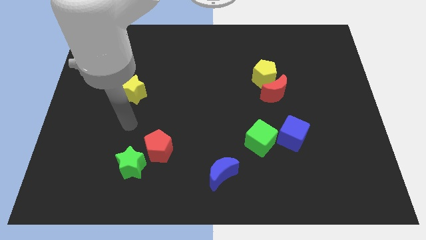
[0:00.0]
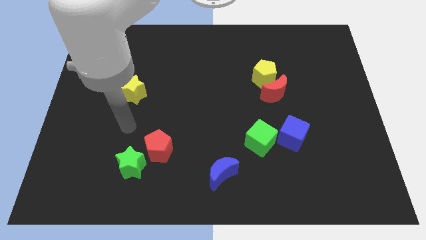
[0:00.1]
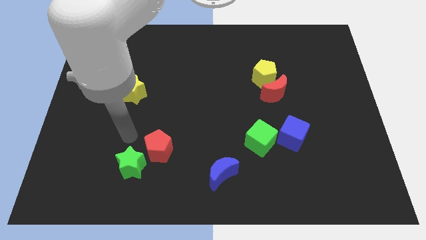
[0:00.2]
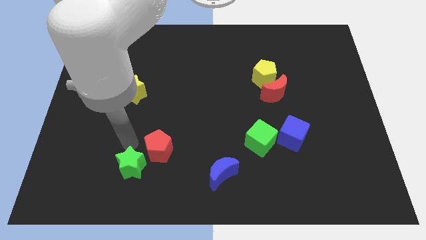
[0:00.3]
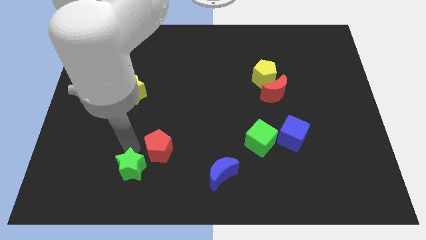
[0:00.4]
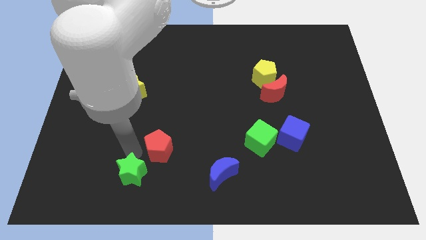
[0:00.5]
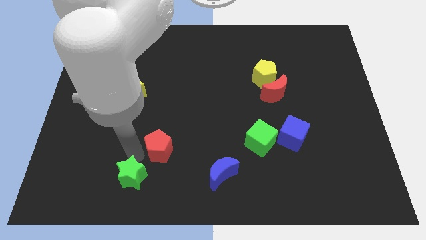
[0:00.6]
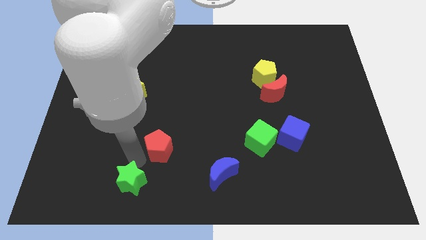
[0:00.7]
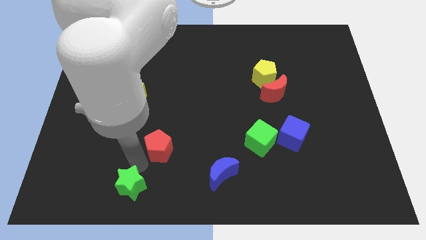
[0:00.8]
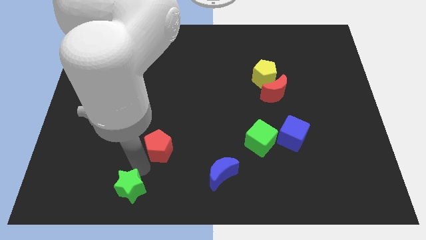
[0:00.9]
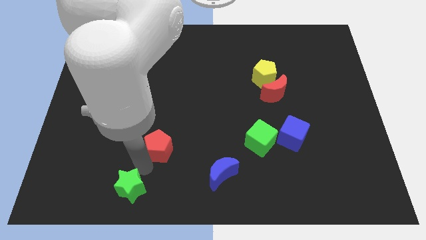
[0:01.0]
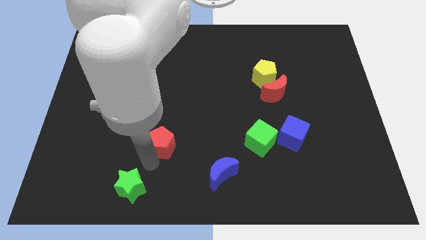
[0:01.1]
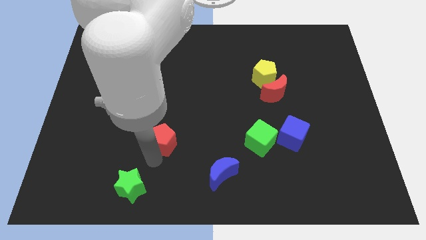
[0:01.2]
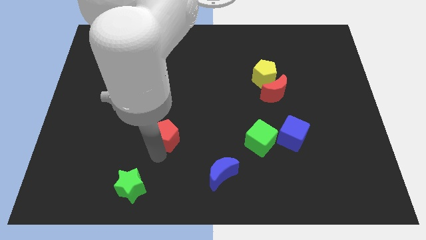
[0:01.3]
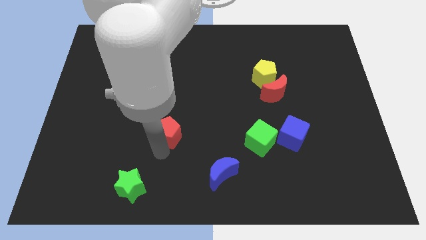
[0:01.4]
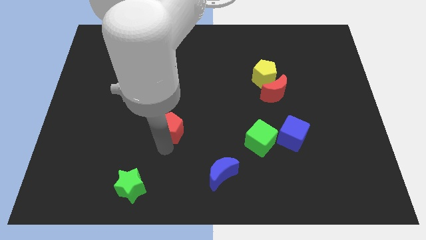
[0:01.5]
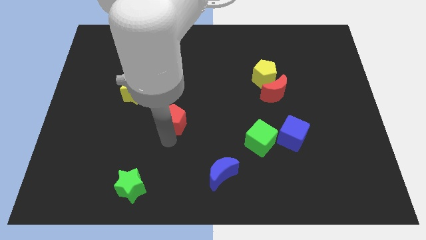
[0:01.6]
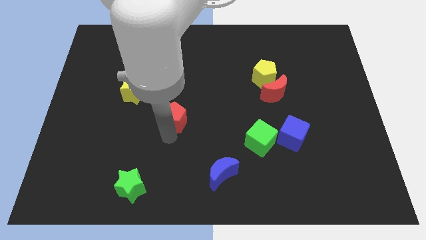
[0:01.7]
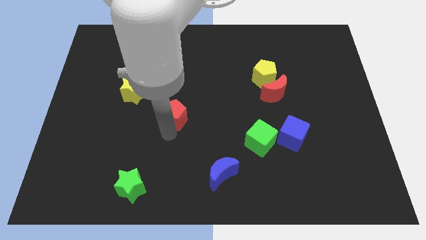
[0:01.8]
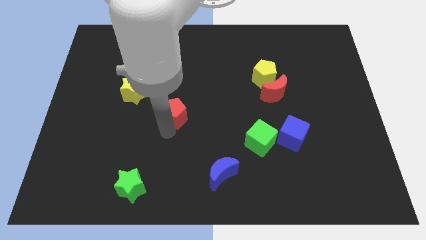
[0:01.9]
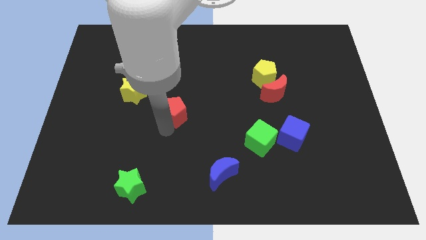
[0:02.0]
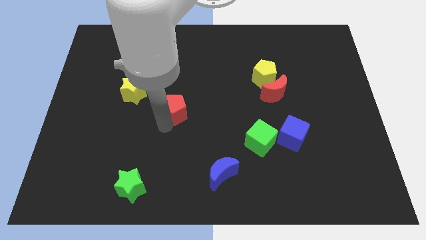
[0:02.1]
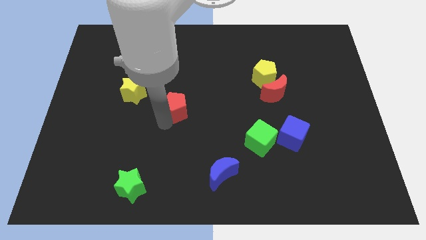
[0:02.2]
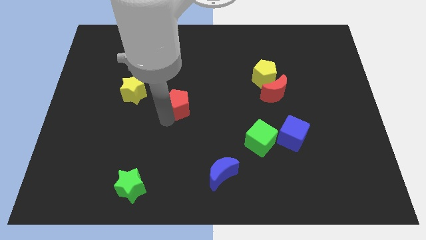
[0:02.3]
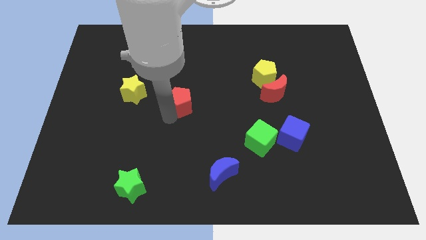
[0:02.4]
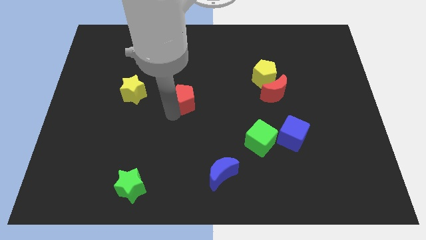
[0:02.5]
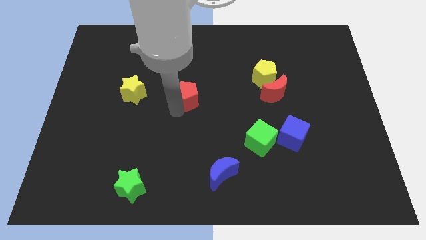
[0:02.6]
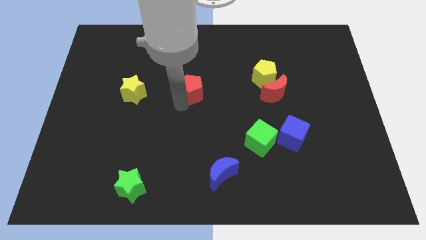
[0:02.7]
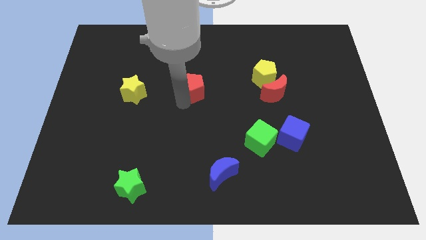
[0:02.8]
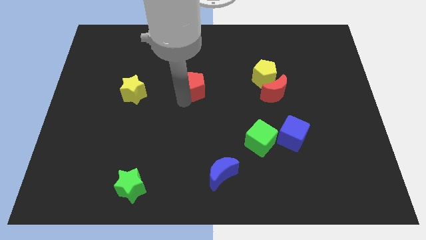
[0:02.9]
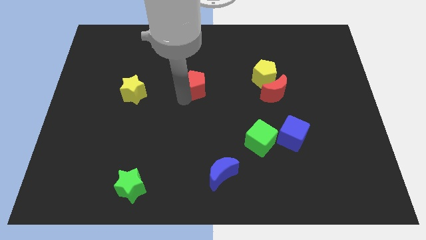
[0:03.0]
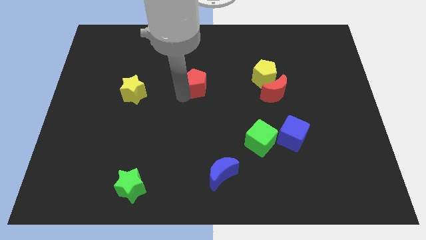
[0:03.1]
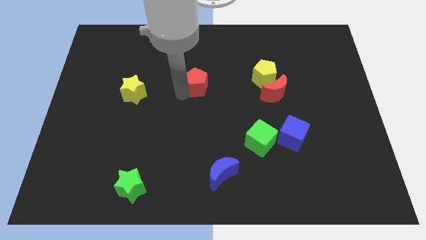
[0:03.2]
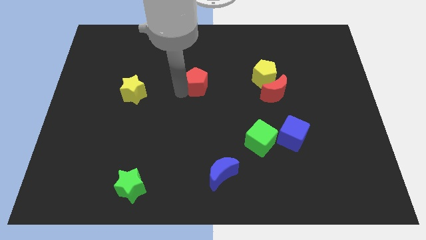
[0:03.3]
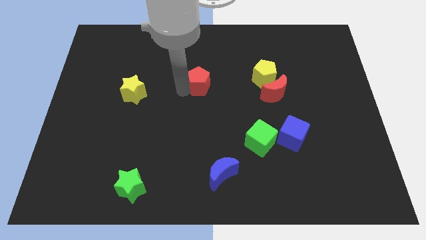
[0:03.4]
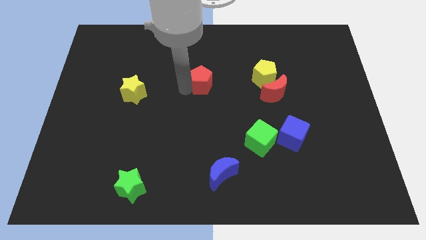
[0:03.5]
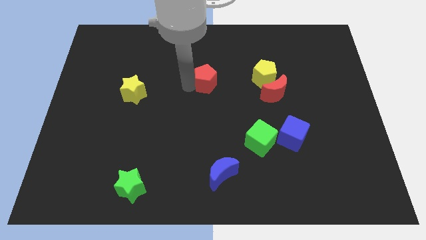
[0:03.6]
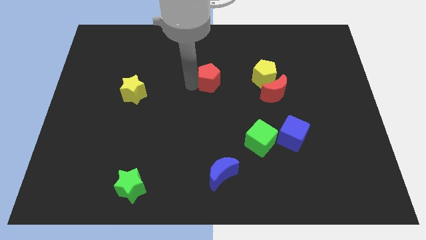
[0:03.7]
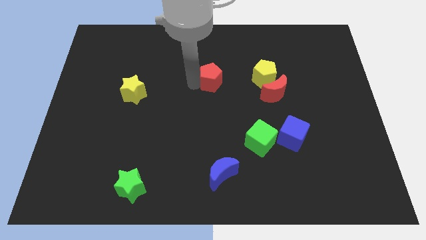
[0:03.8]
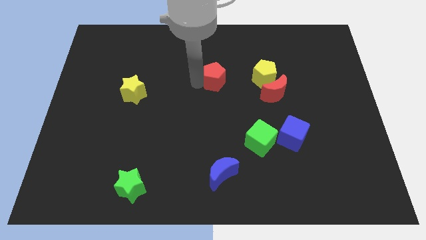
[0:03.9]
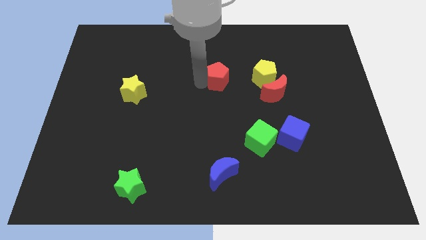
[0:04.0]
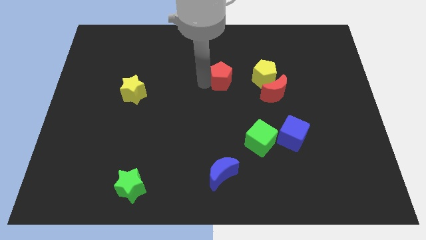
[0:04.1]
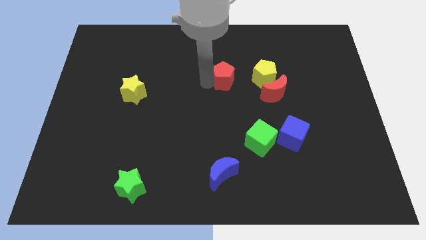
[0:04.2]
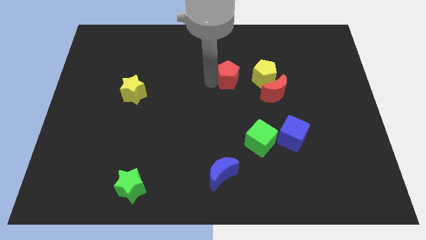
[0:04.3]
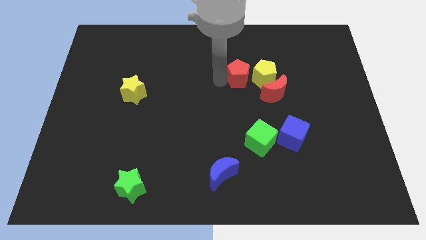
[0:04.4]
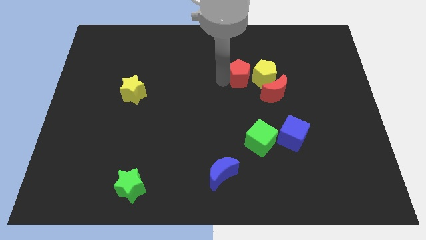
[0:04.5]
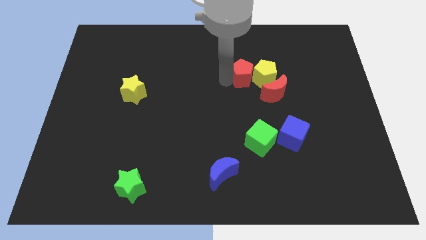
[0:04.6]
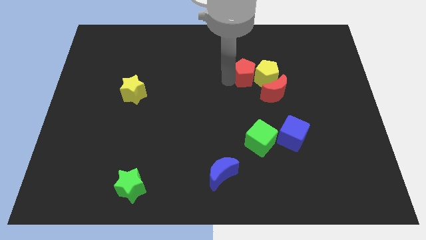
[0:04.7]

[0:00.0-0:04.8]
put the red pentagon next to the yellow pentagon

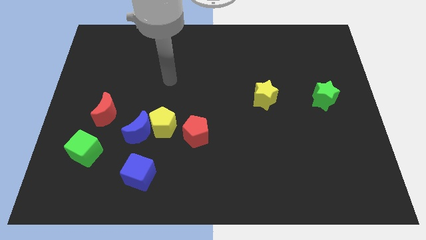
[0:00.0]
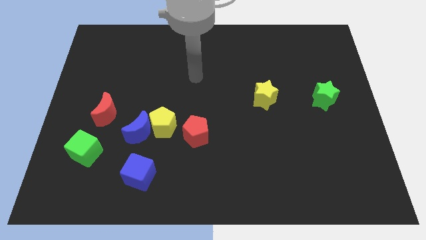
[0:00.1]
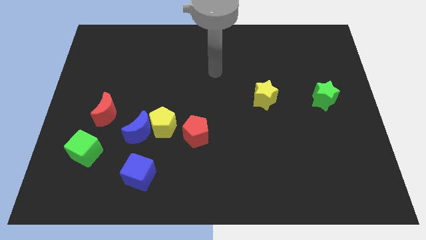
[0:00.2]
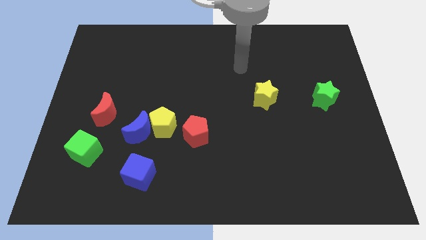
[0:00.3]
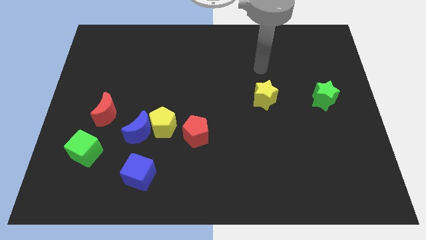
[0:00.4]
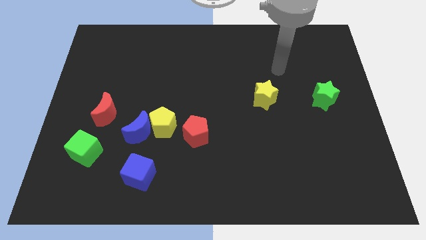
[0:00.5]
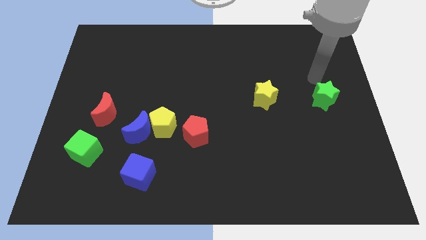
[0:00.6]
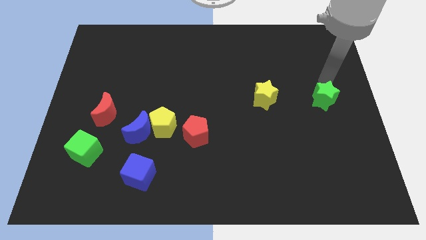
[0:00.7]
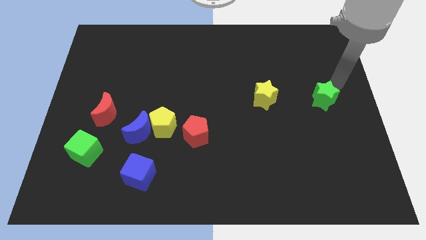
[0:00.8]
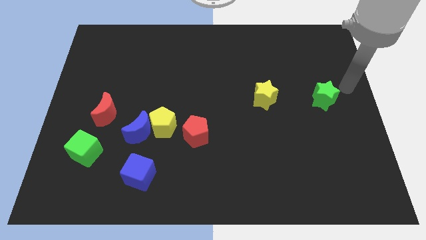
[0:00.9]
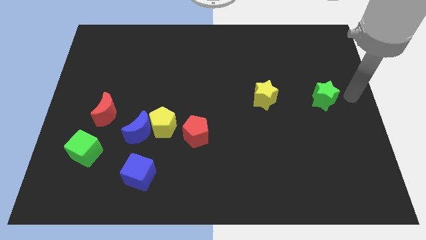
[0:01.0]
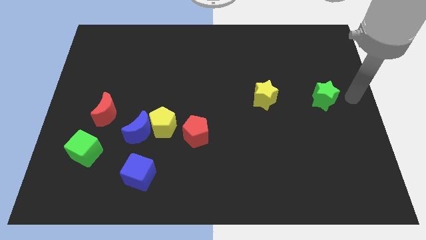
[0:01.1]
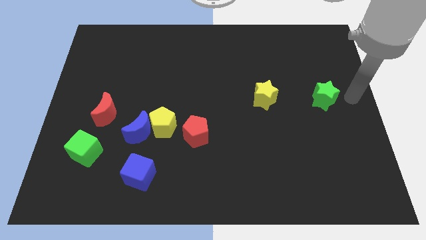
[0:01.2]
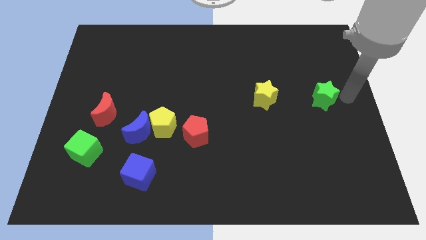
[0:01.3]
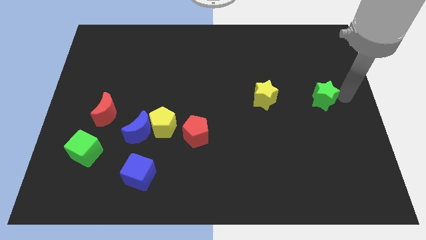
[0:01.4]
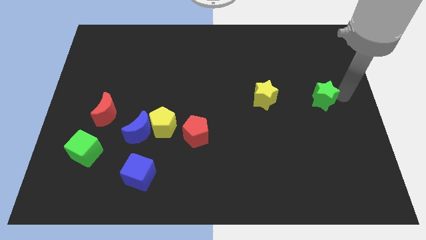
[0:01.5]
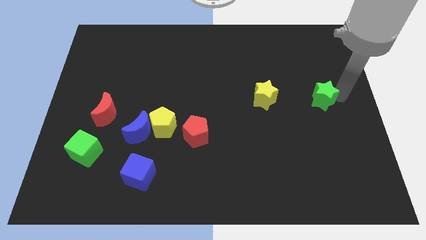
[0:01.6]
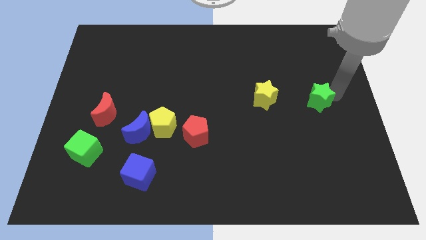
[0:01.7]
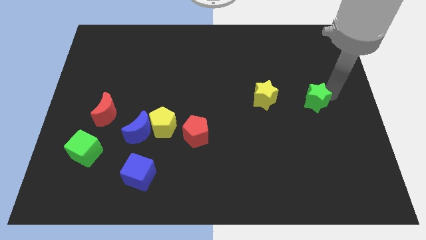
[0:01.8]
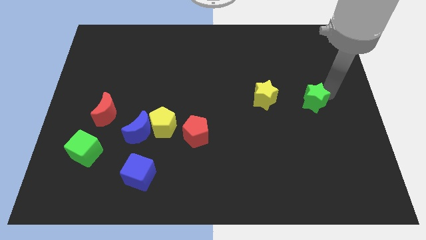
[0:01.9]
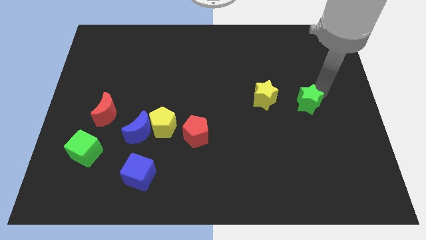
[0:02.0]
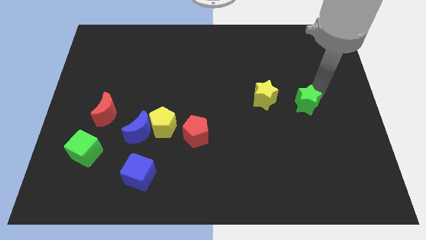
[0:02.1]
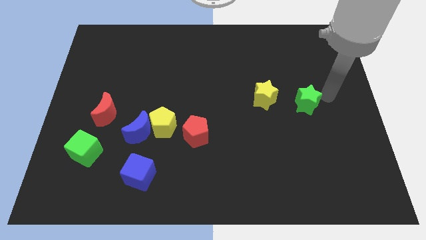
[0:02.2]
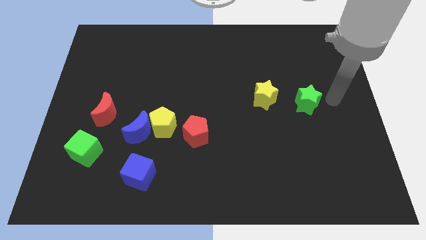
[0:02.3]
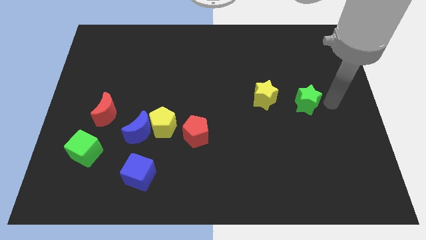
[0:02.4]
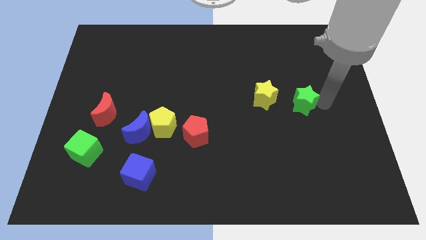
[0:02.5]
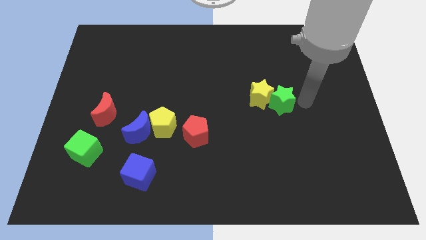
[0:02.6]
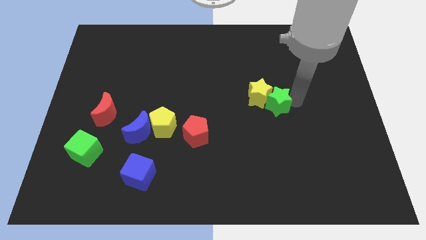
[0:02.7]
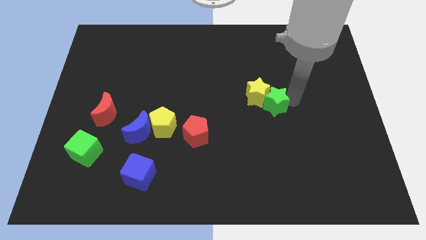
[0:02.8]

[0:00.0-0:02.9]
slide the green star towards the yellow star

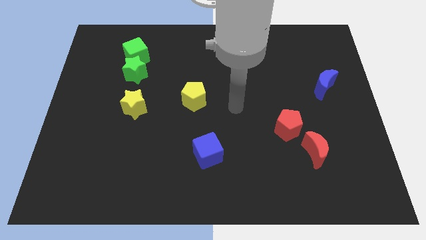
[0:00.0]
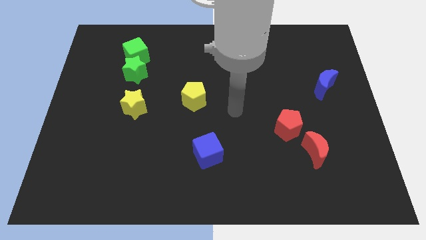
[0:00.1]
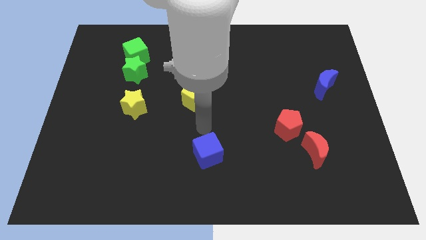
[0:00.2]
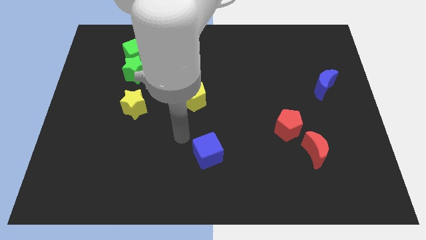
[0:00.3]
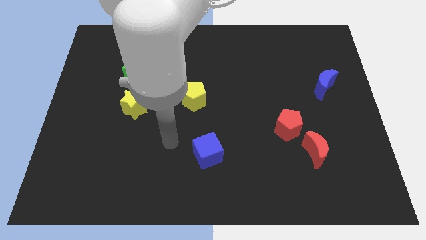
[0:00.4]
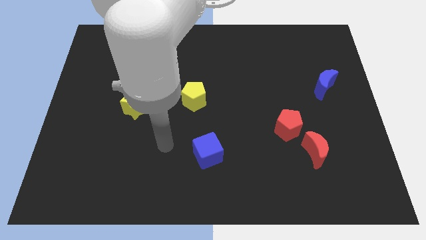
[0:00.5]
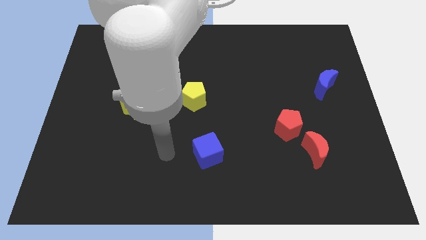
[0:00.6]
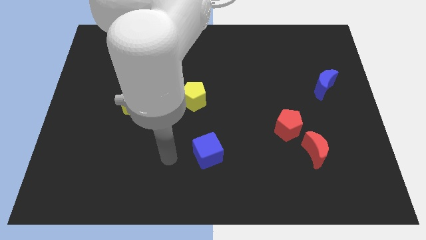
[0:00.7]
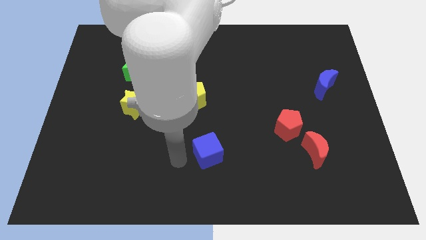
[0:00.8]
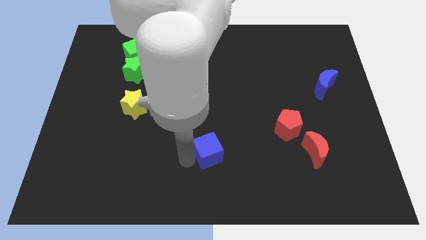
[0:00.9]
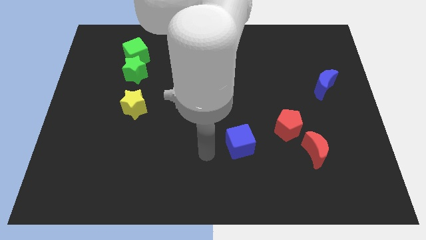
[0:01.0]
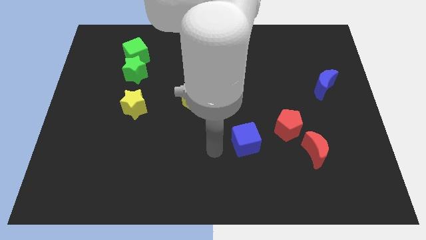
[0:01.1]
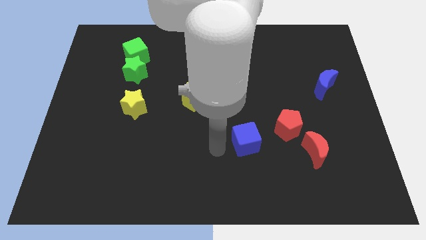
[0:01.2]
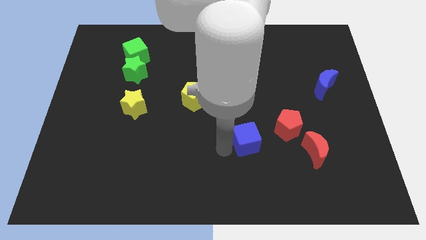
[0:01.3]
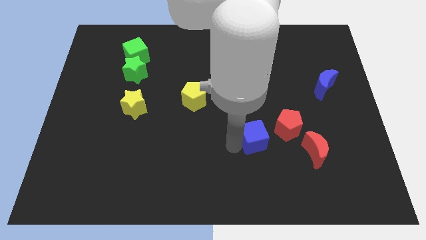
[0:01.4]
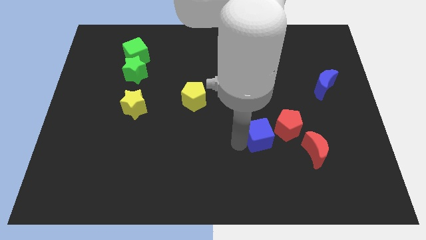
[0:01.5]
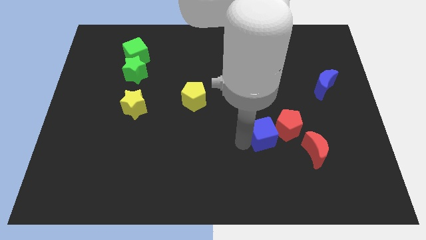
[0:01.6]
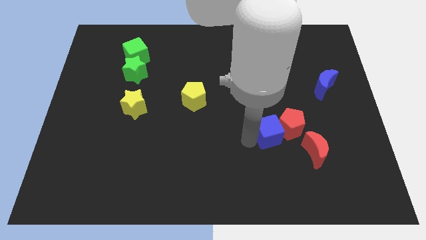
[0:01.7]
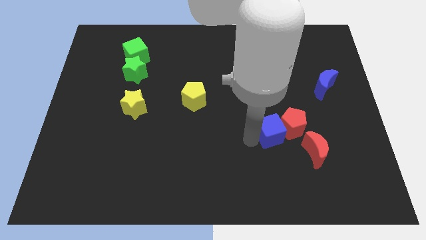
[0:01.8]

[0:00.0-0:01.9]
push the blue cube next to the red pentagon
